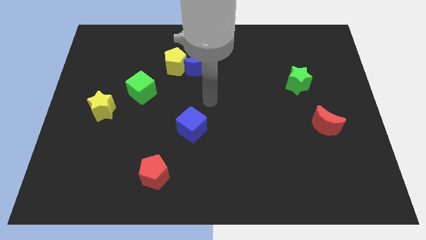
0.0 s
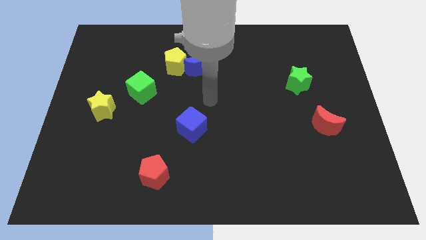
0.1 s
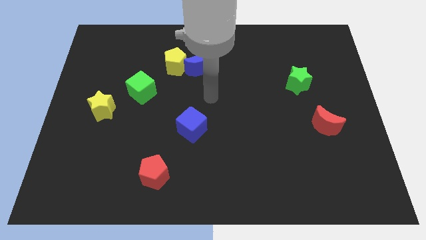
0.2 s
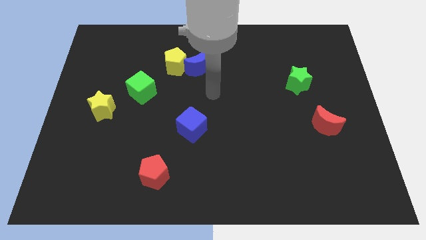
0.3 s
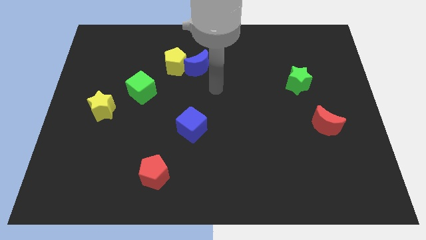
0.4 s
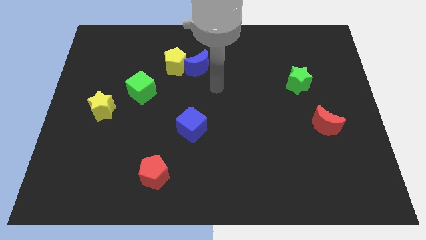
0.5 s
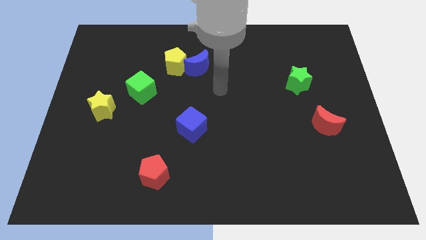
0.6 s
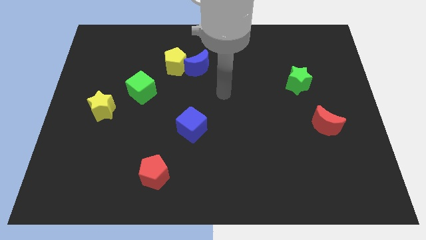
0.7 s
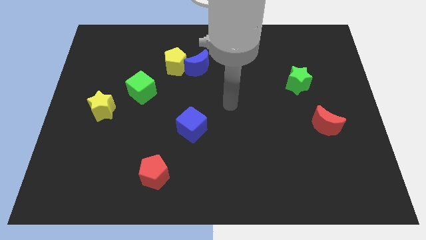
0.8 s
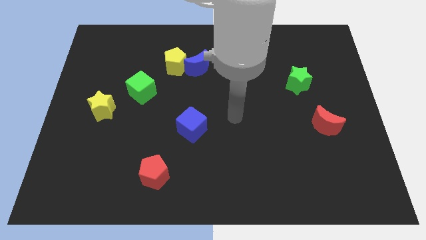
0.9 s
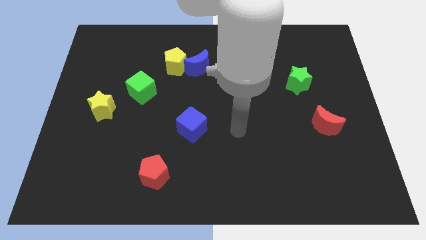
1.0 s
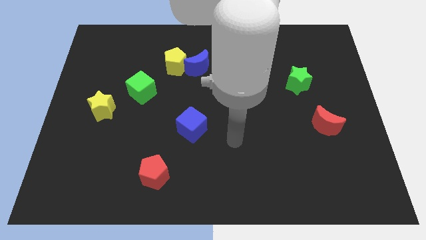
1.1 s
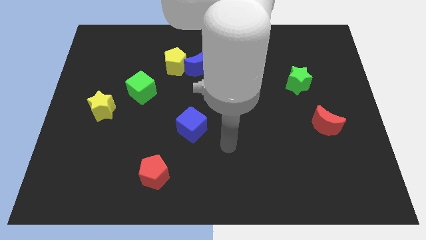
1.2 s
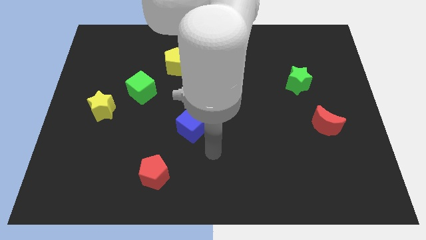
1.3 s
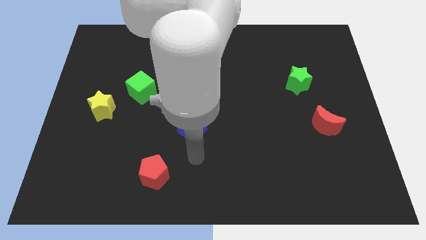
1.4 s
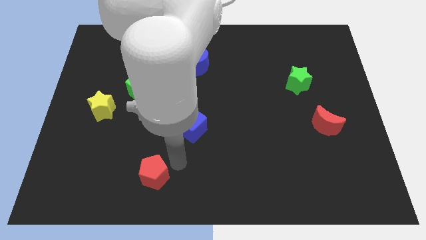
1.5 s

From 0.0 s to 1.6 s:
place arm below the blue cube

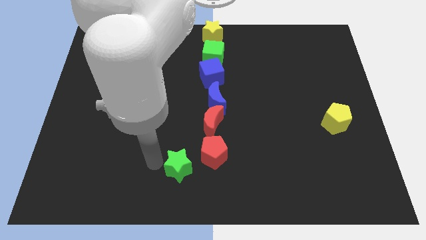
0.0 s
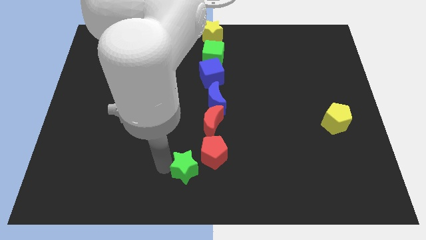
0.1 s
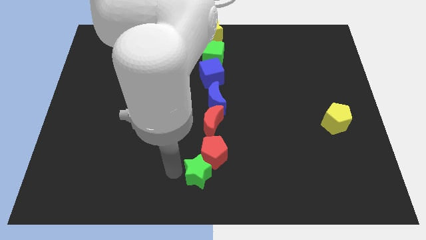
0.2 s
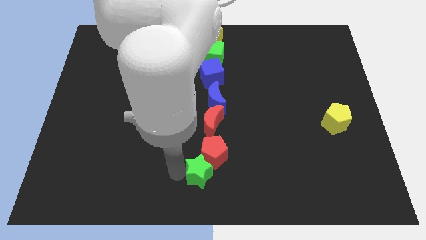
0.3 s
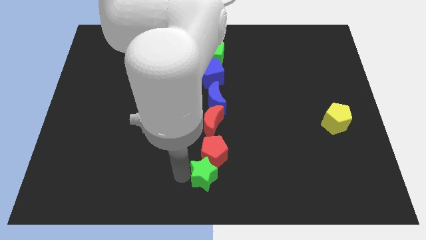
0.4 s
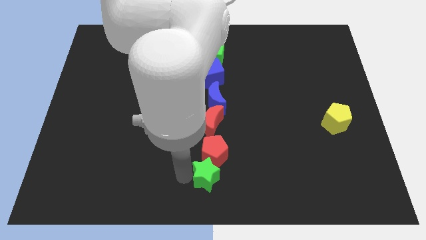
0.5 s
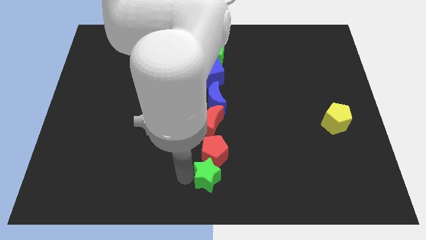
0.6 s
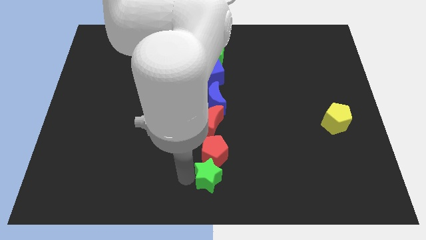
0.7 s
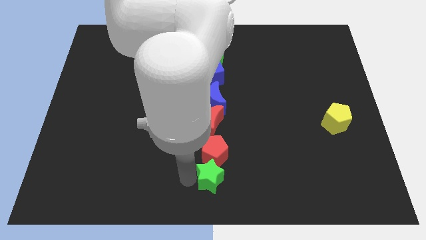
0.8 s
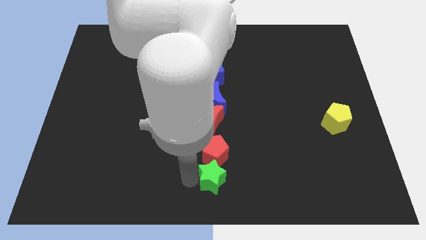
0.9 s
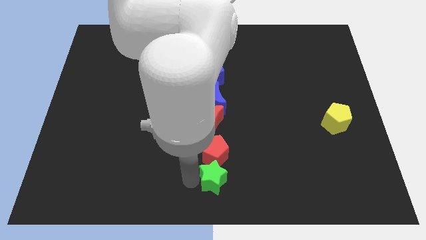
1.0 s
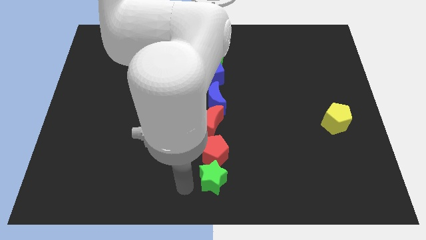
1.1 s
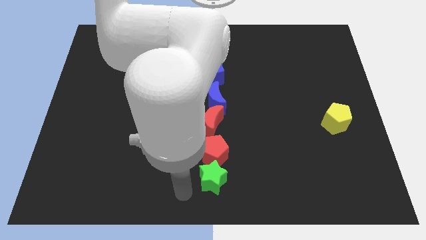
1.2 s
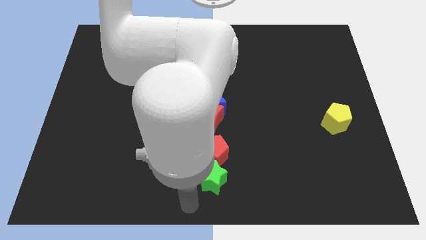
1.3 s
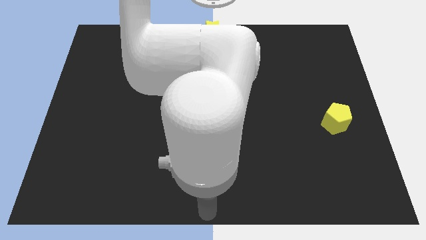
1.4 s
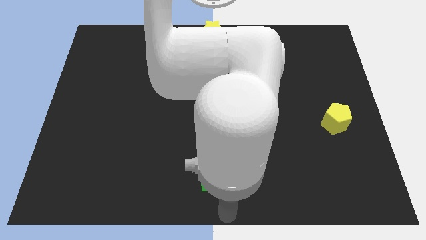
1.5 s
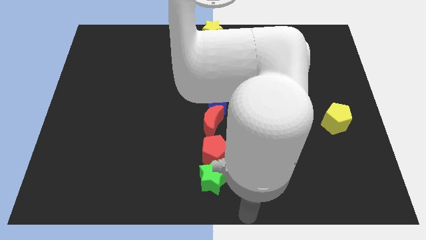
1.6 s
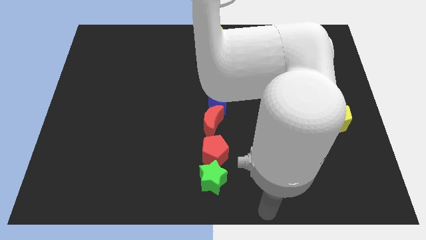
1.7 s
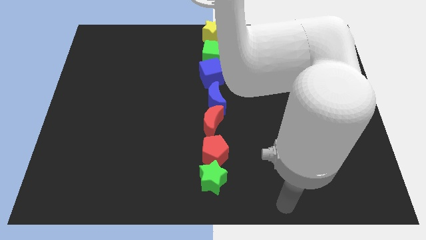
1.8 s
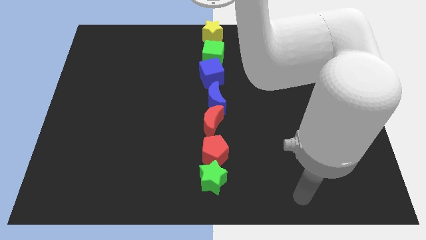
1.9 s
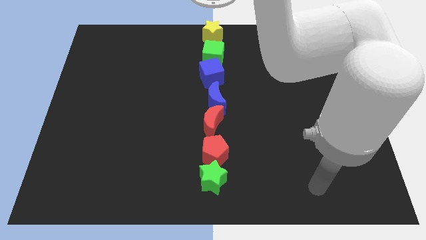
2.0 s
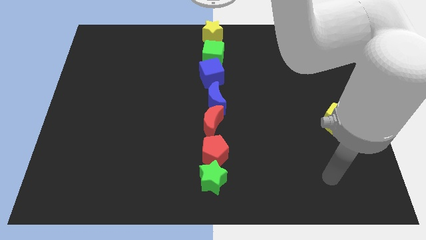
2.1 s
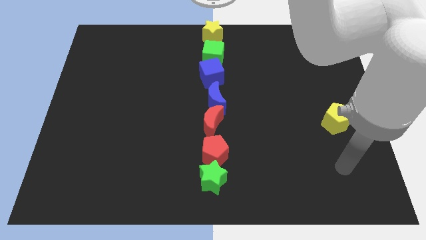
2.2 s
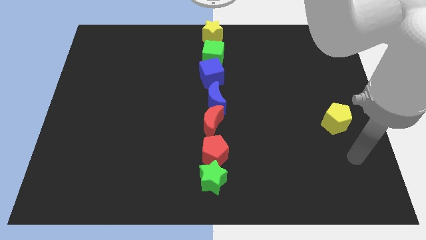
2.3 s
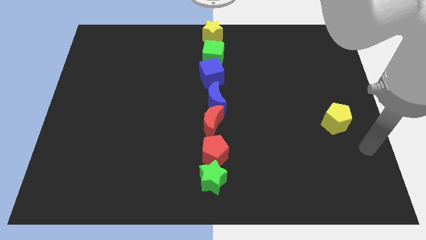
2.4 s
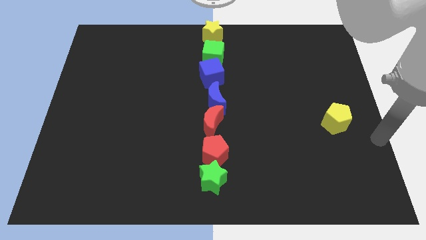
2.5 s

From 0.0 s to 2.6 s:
move green star below red pentagon

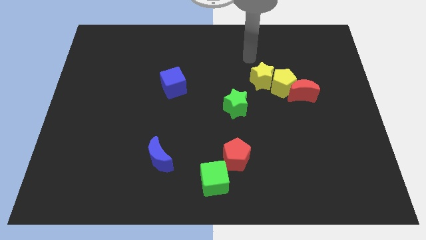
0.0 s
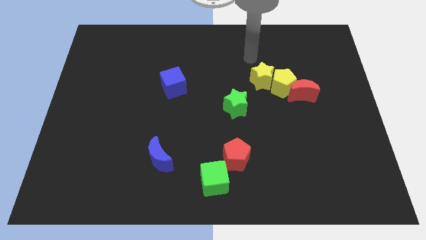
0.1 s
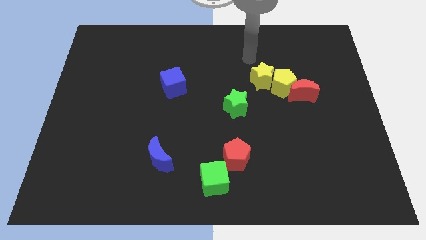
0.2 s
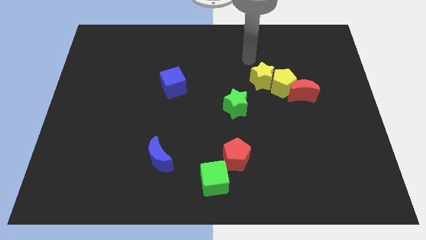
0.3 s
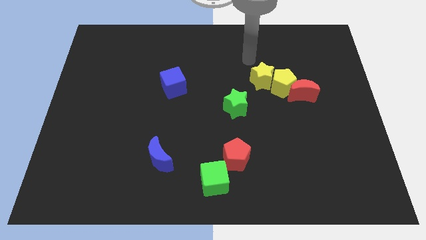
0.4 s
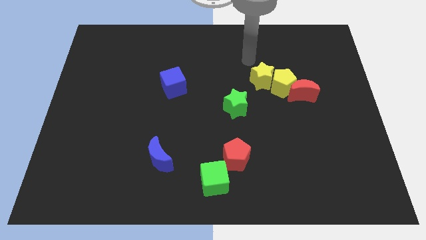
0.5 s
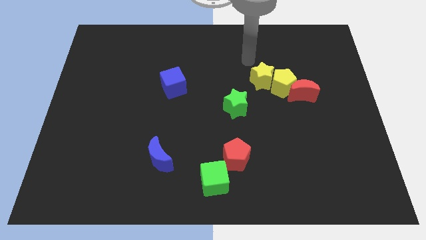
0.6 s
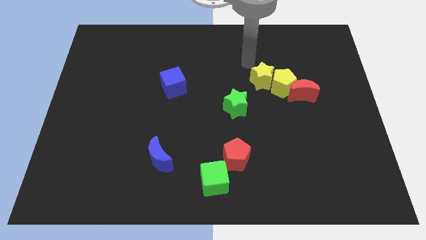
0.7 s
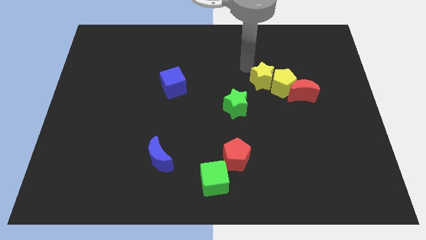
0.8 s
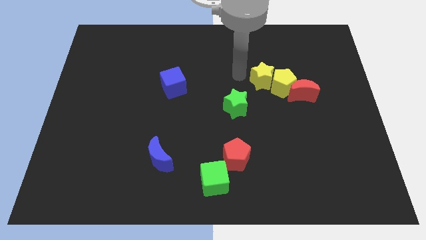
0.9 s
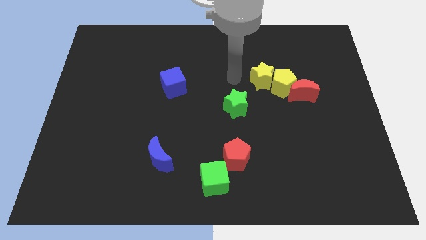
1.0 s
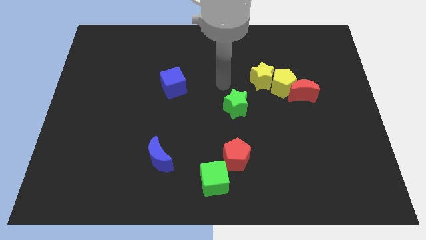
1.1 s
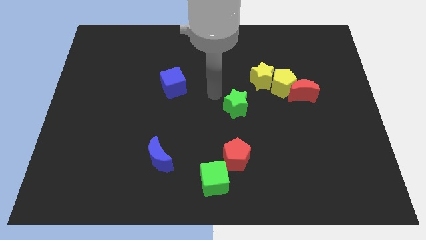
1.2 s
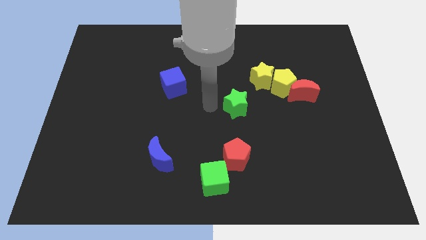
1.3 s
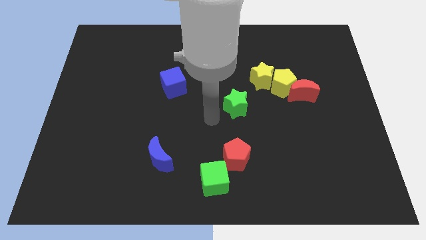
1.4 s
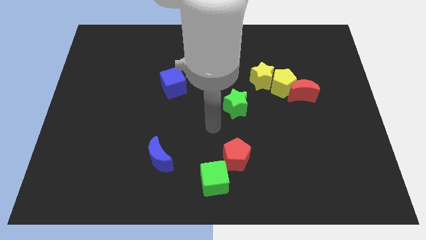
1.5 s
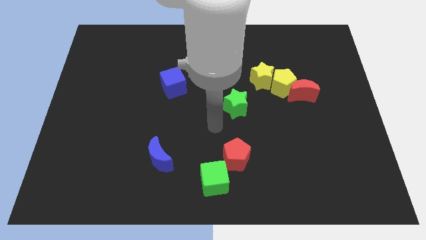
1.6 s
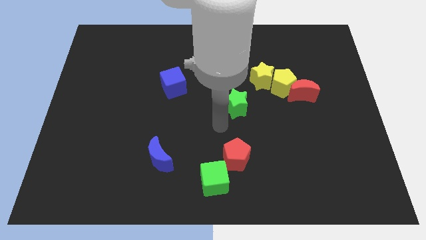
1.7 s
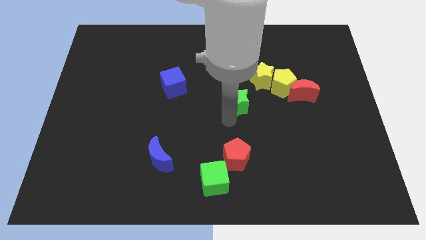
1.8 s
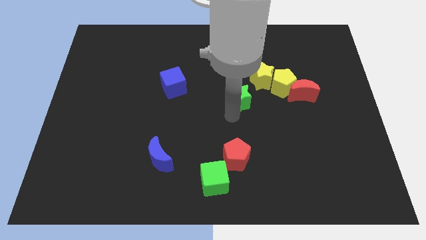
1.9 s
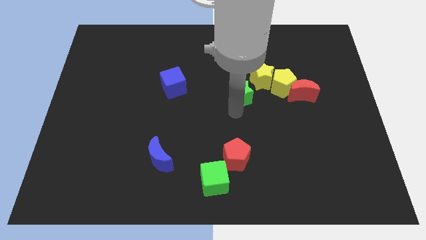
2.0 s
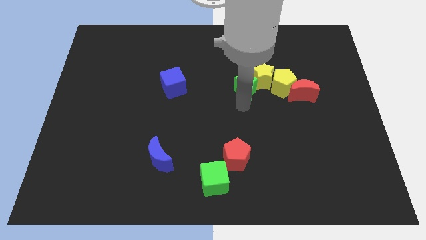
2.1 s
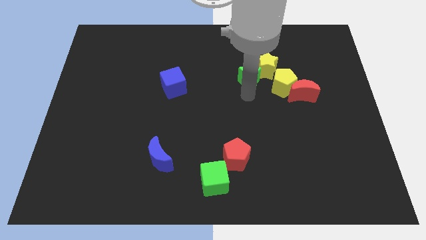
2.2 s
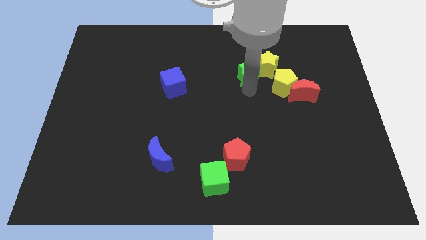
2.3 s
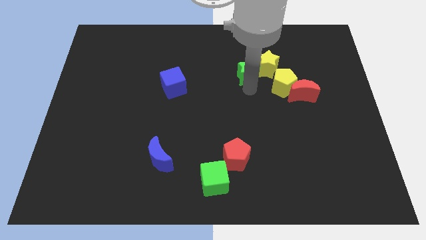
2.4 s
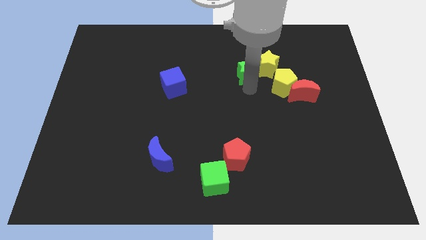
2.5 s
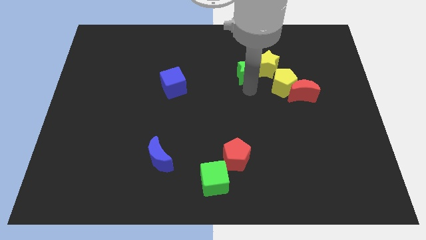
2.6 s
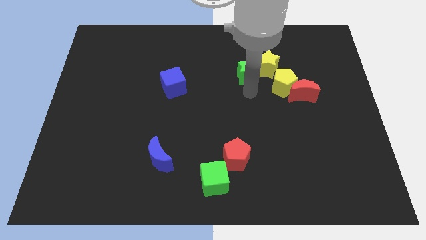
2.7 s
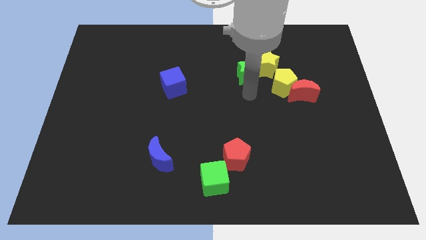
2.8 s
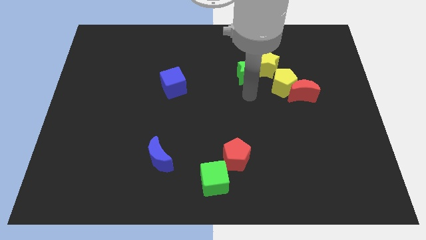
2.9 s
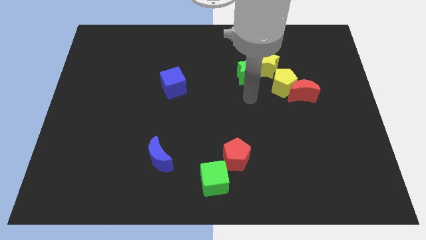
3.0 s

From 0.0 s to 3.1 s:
move the green star to the right of the blue cube

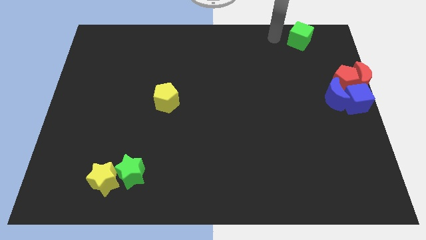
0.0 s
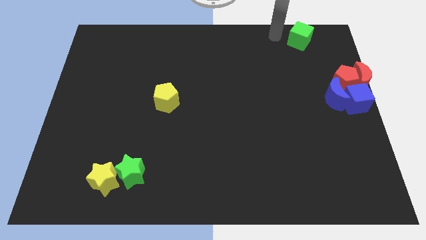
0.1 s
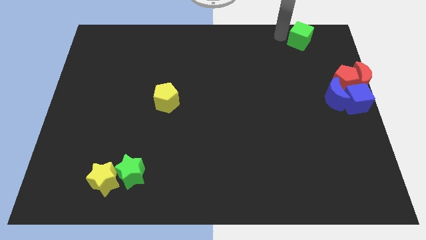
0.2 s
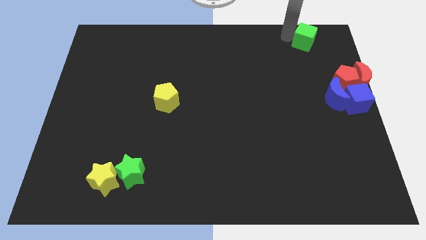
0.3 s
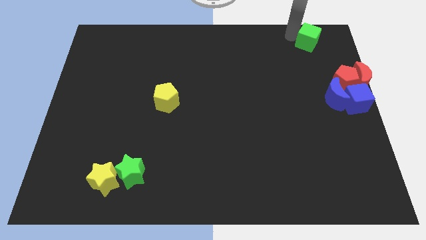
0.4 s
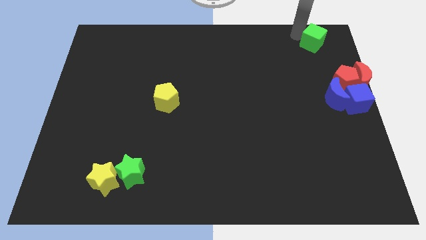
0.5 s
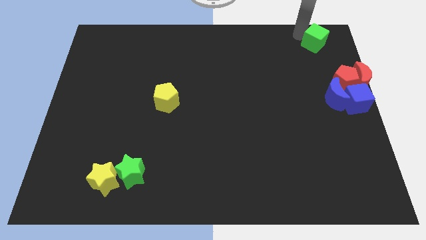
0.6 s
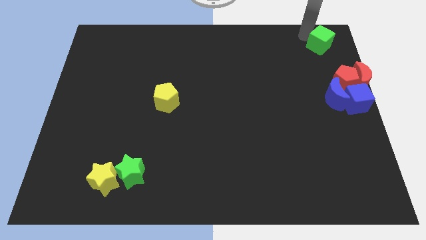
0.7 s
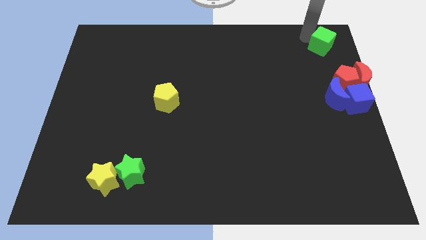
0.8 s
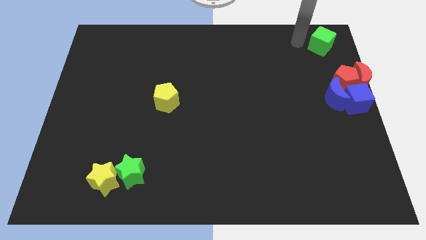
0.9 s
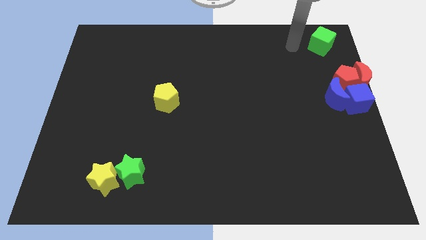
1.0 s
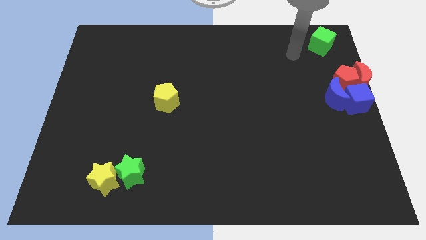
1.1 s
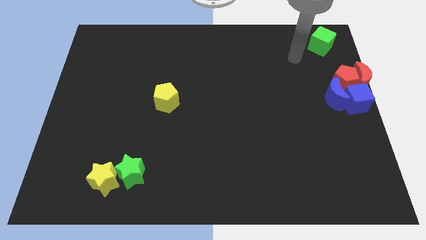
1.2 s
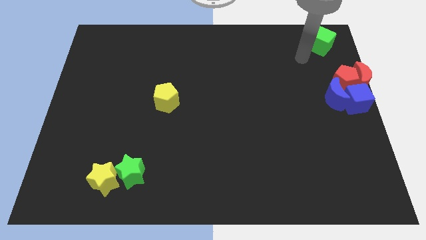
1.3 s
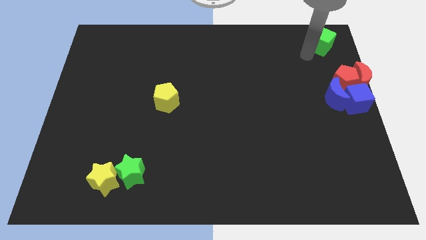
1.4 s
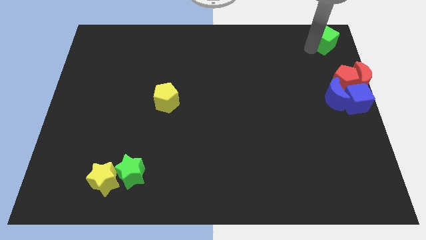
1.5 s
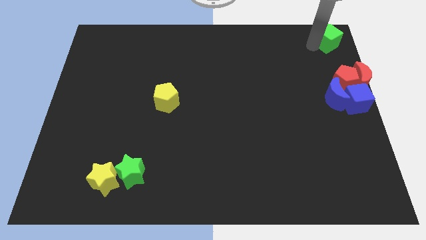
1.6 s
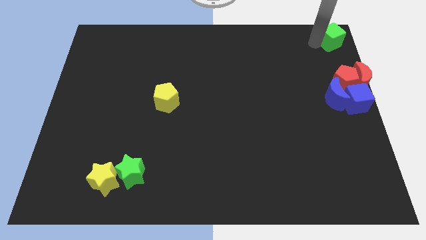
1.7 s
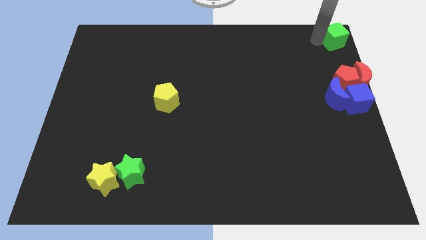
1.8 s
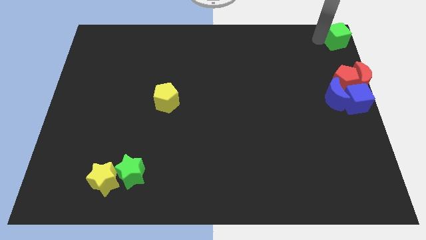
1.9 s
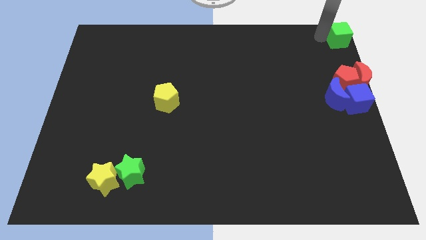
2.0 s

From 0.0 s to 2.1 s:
push green cube to the top right
